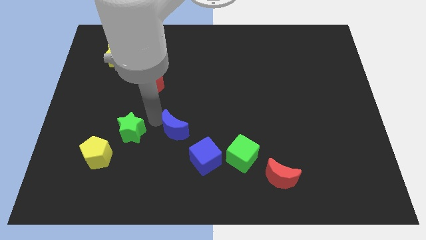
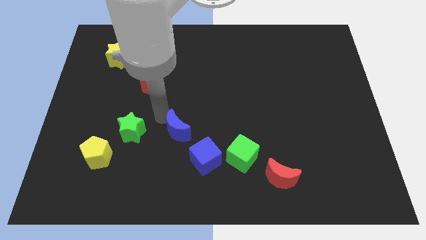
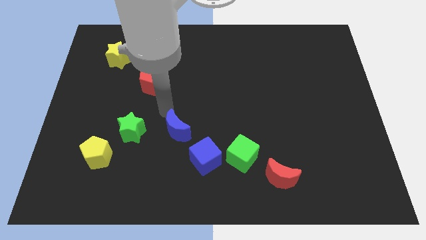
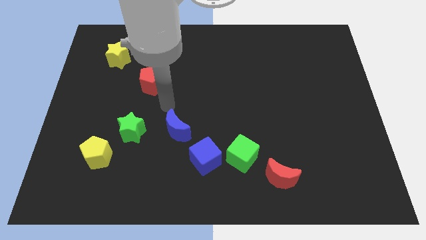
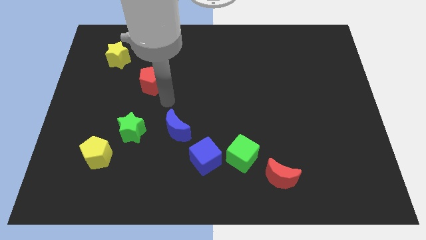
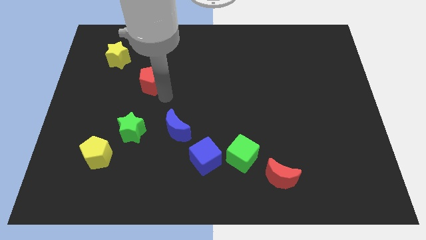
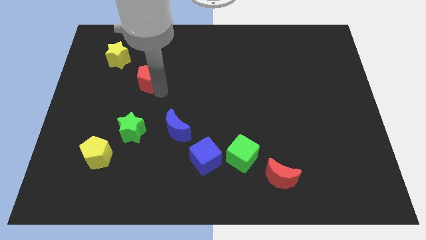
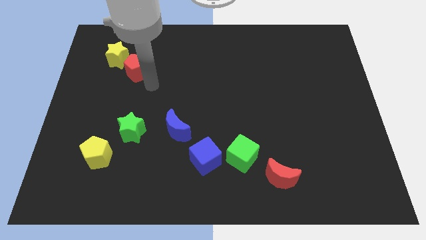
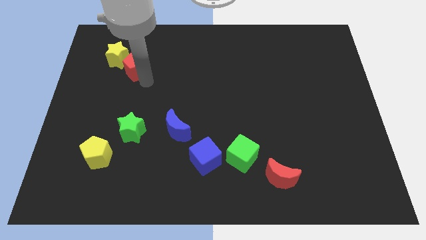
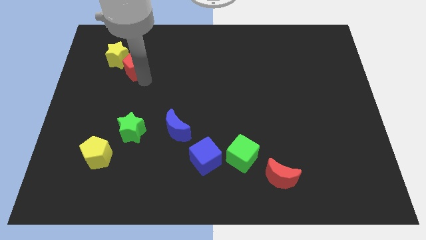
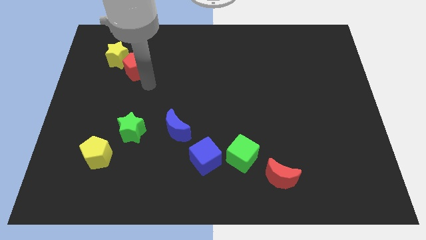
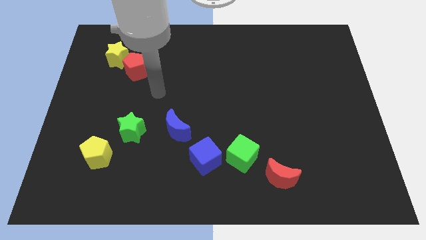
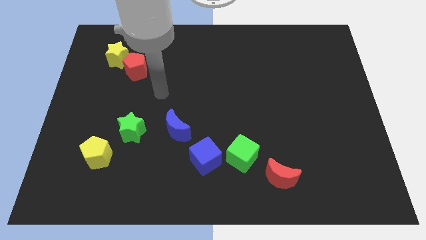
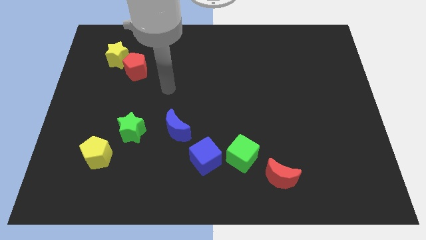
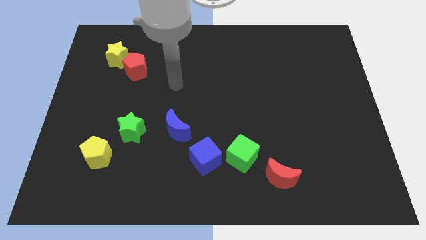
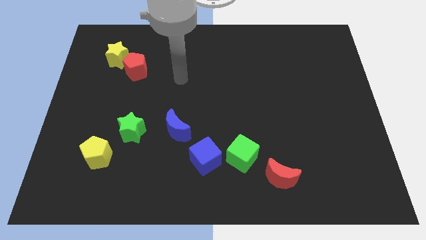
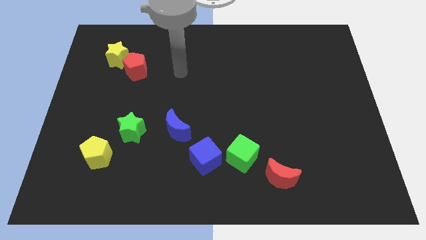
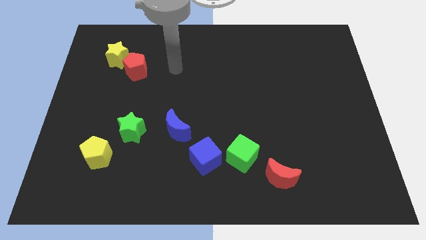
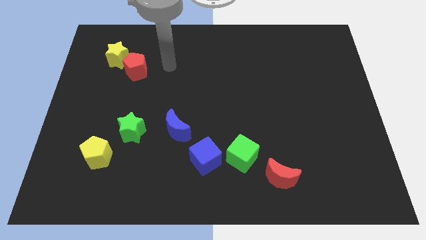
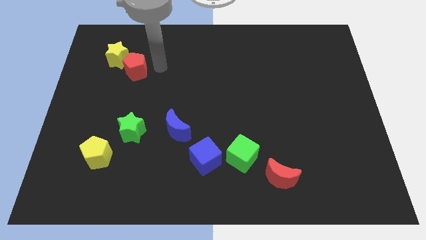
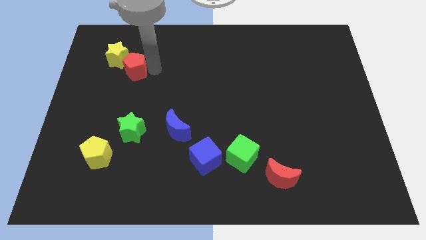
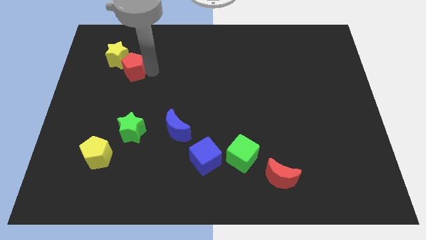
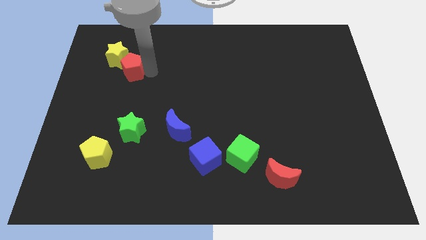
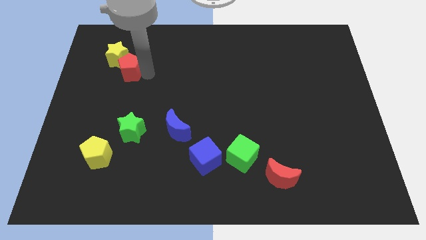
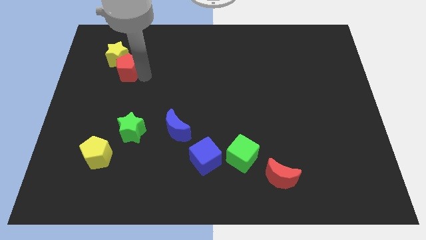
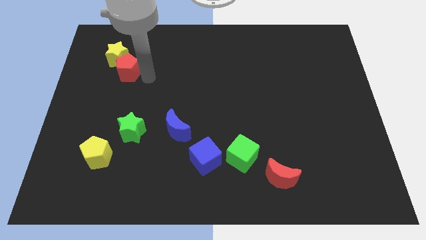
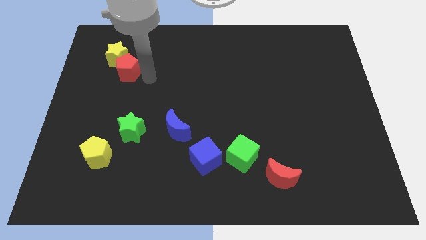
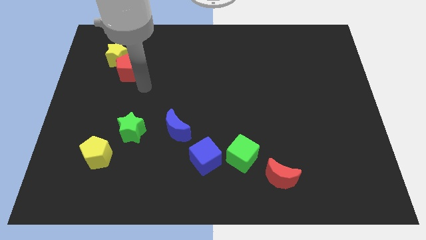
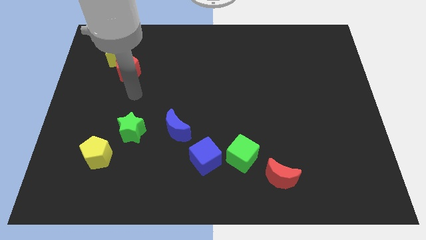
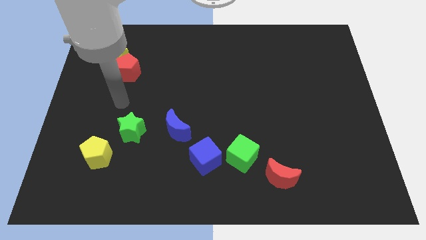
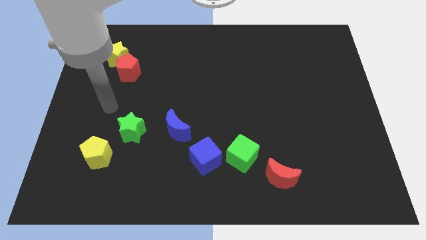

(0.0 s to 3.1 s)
place the red pentagon to the bottom right of the yellow star

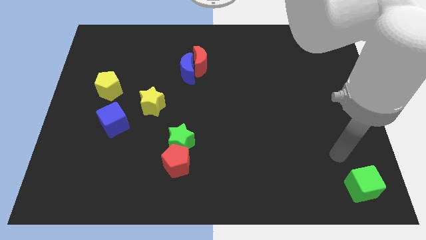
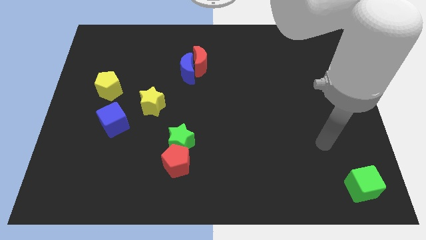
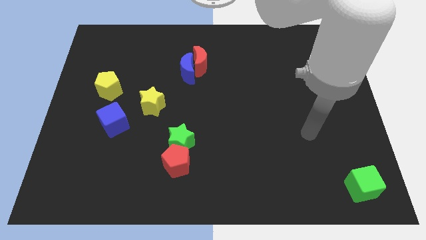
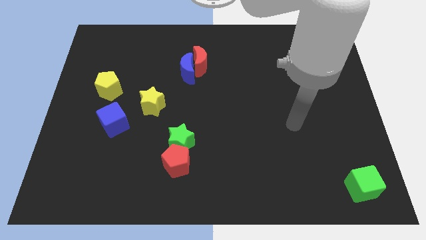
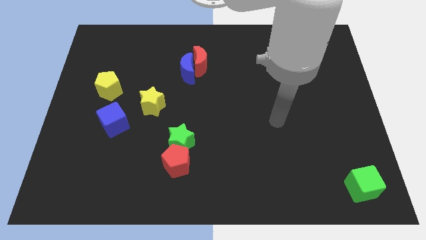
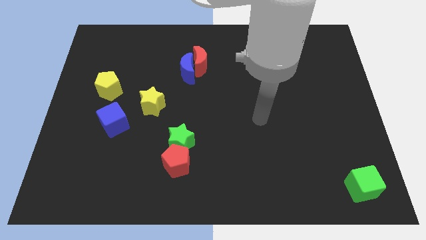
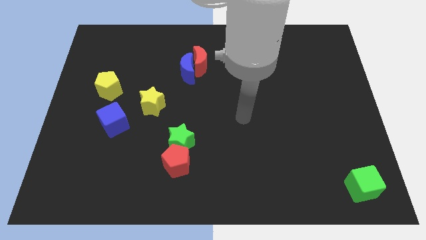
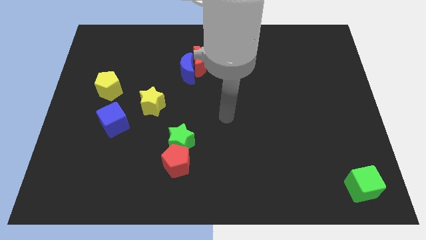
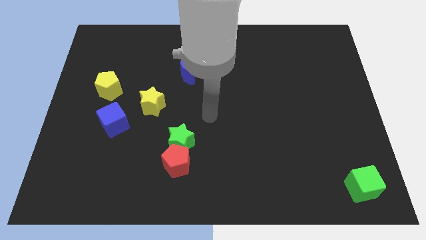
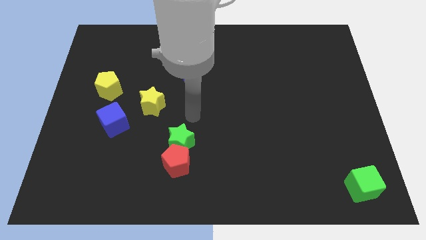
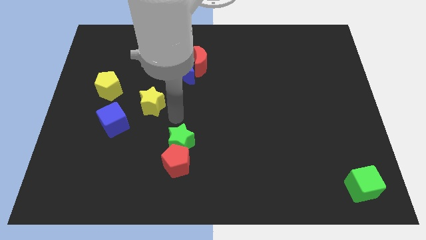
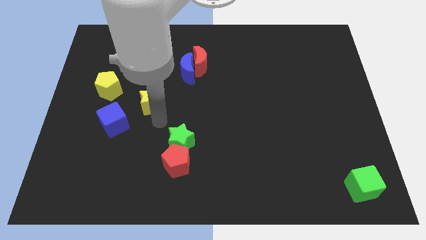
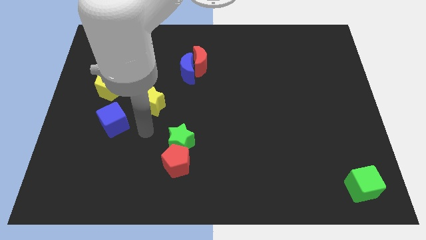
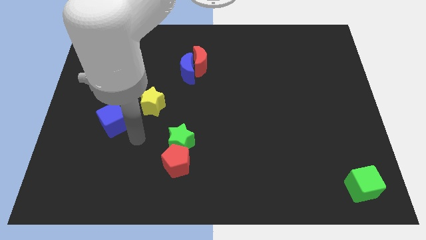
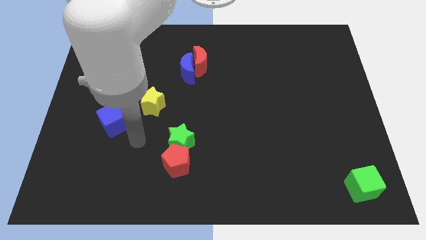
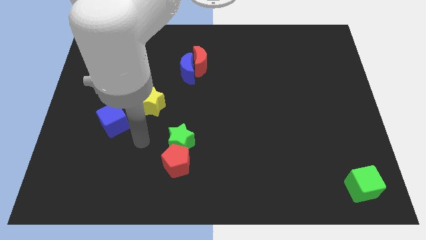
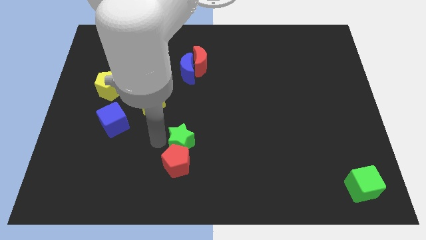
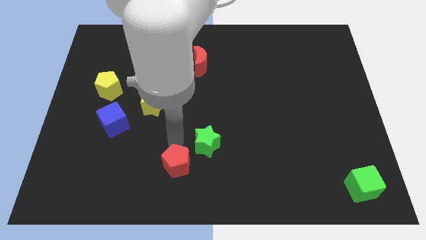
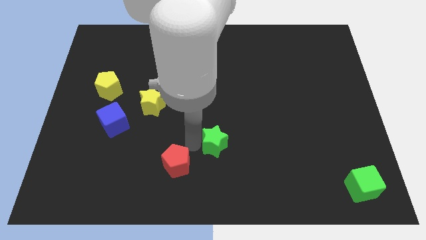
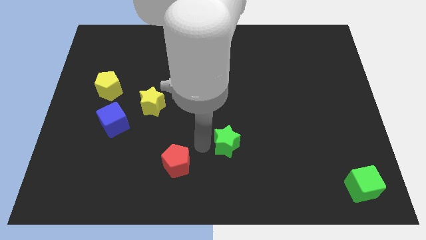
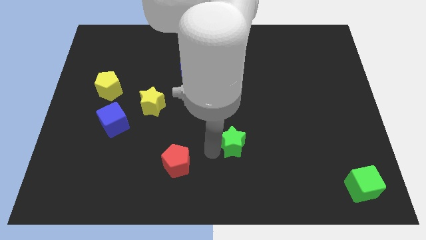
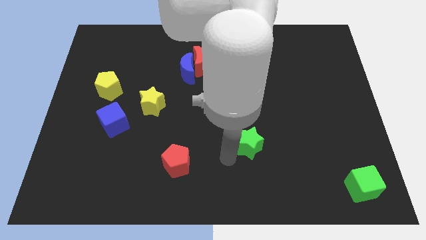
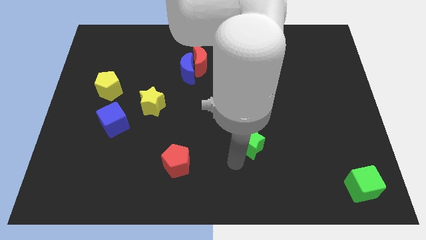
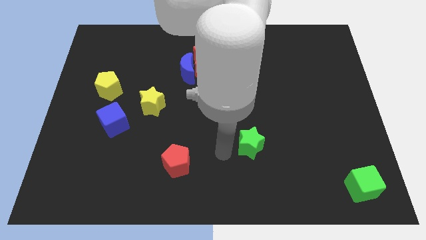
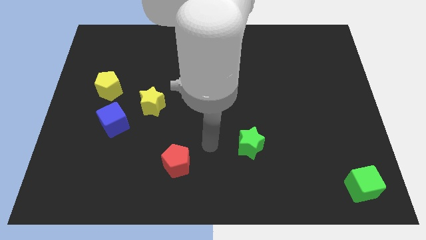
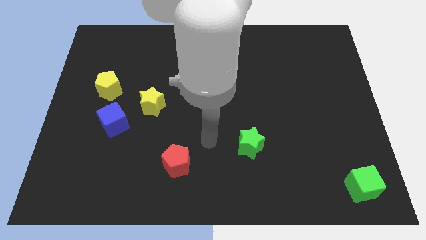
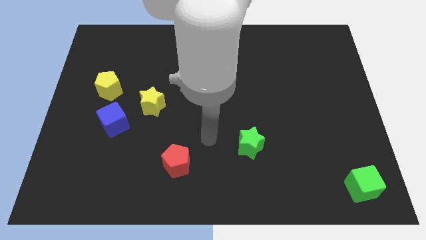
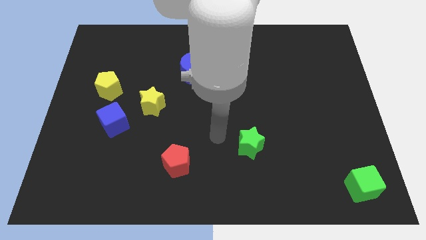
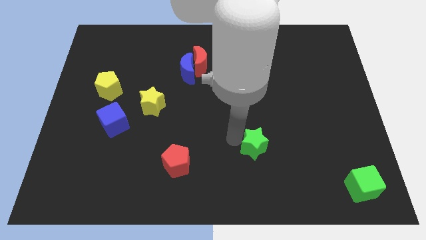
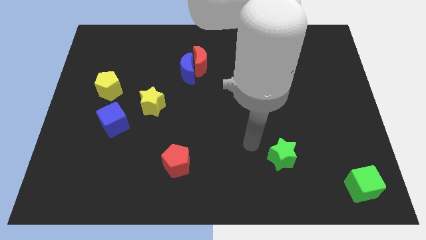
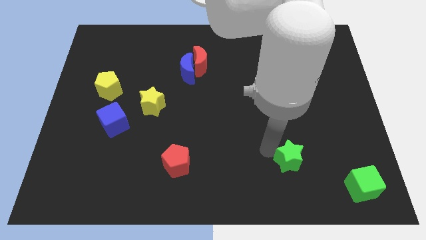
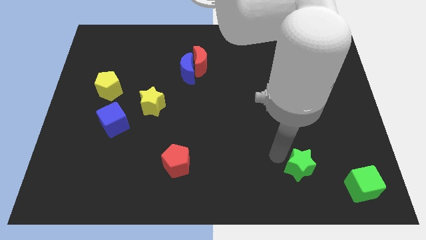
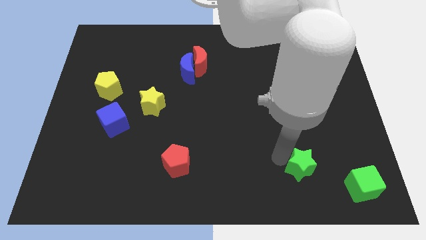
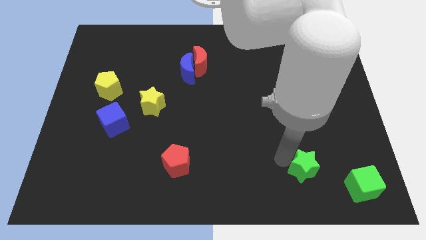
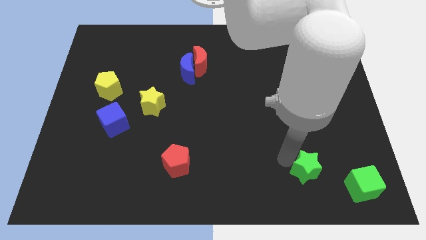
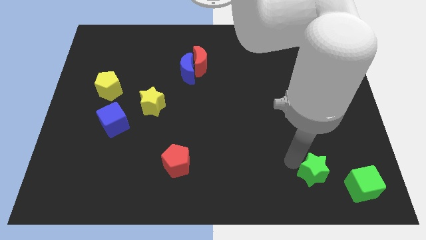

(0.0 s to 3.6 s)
place the green star in between the green cube and red pentagon

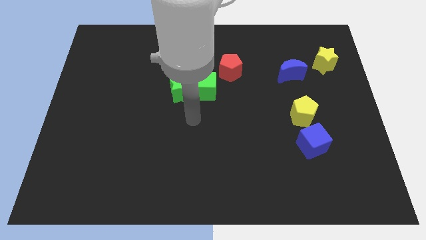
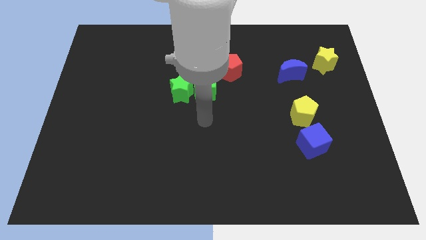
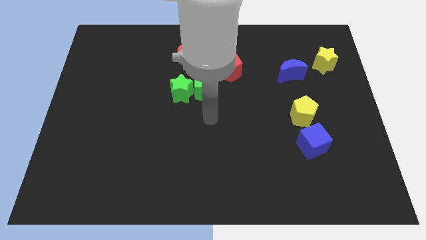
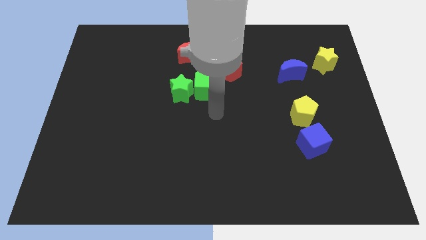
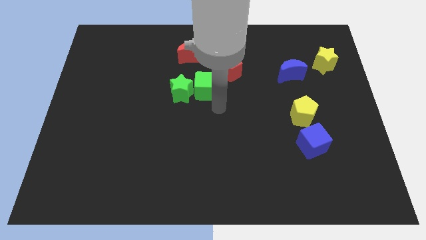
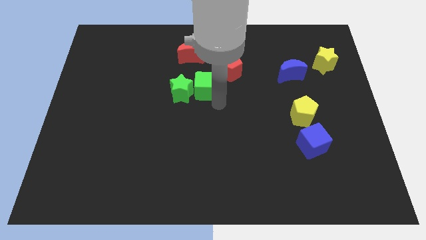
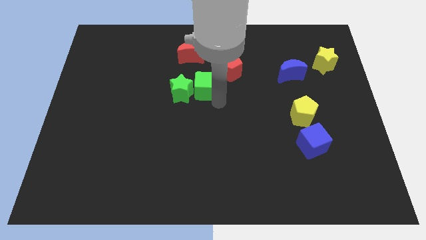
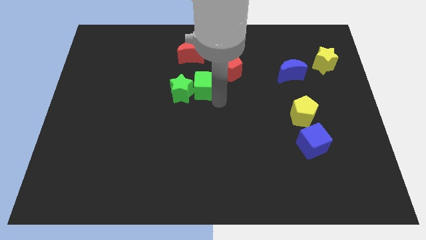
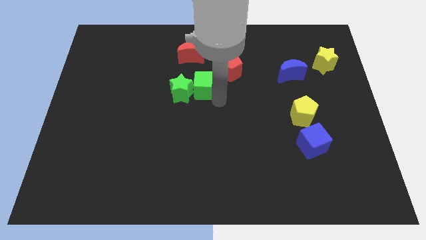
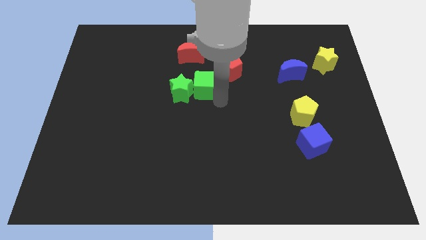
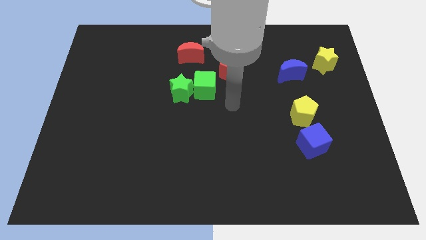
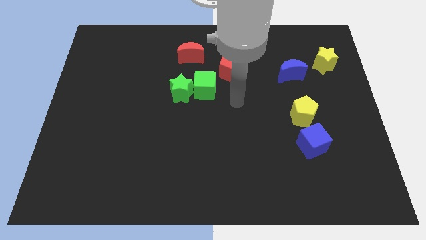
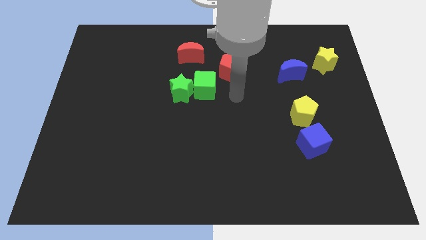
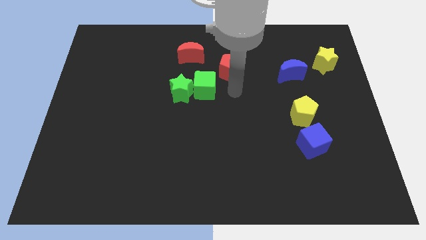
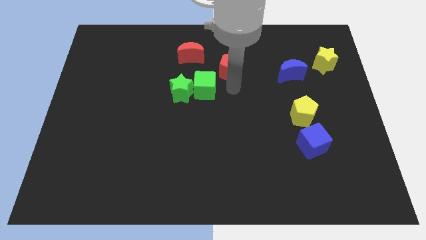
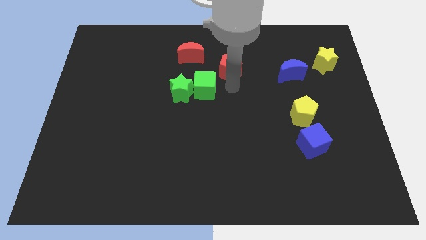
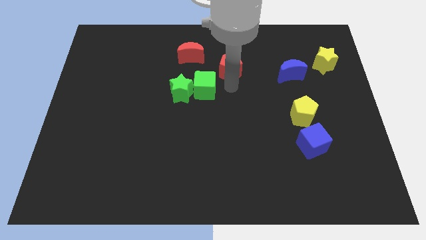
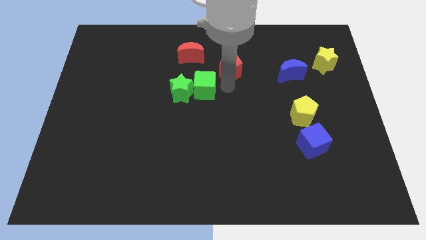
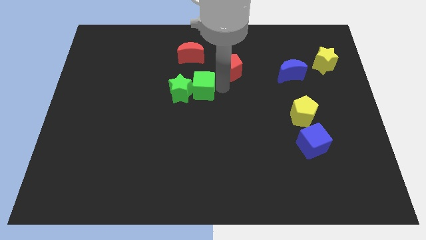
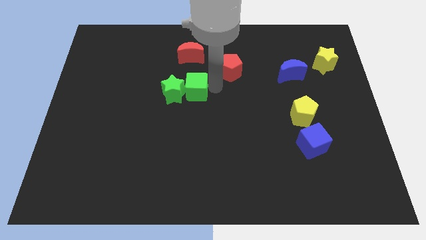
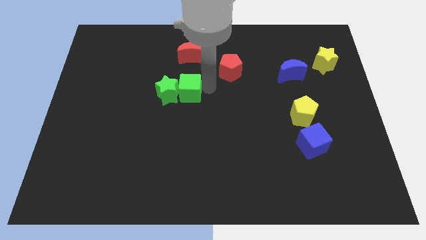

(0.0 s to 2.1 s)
slightly push the green blocks to the left

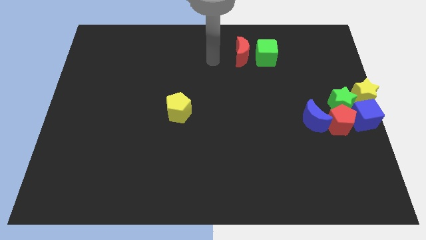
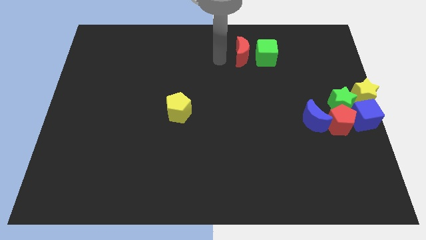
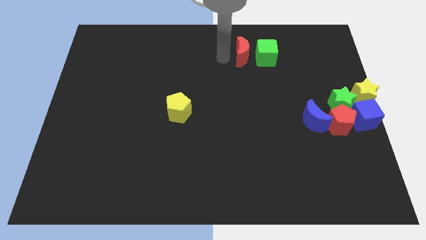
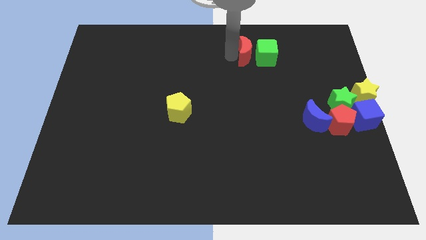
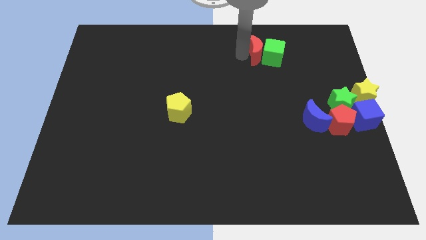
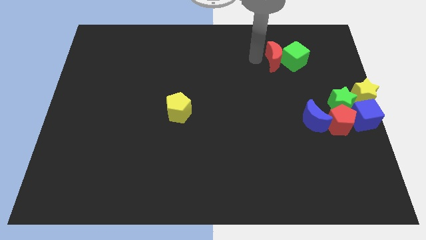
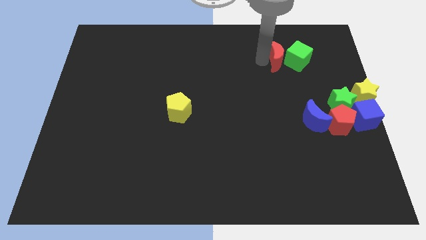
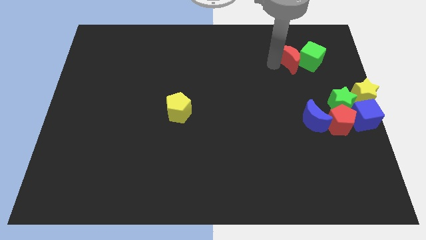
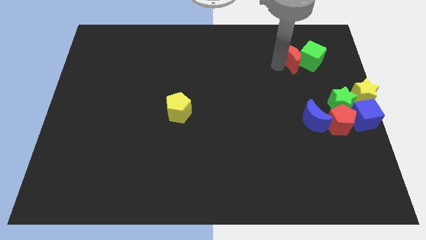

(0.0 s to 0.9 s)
push the red crescent along with the green cube
